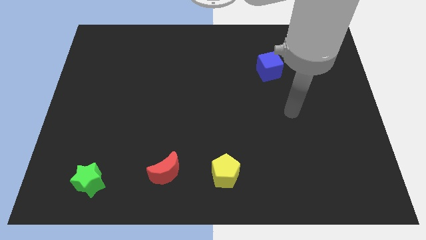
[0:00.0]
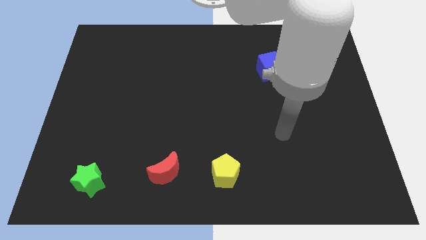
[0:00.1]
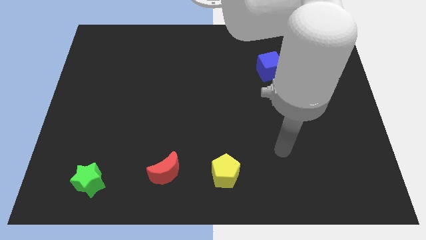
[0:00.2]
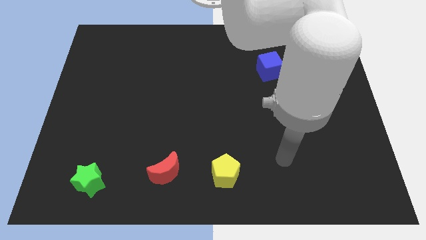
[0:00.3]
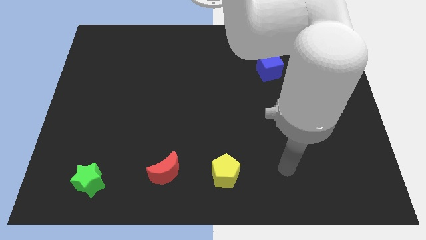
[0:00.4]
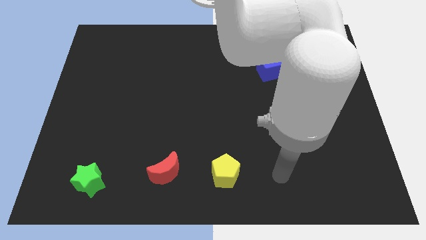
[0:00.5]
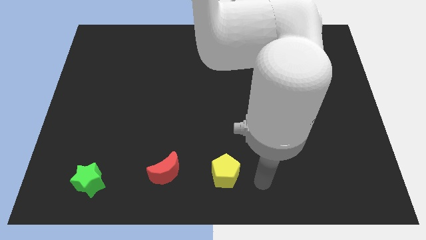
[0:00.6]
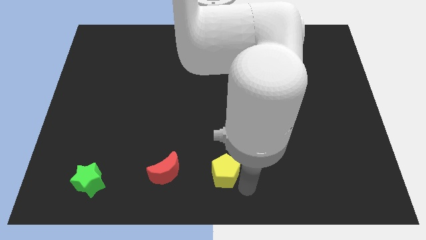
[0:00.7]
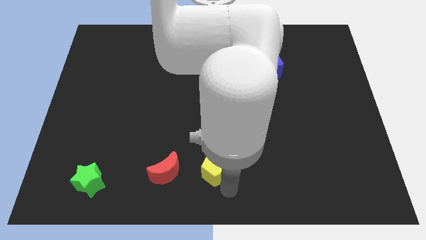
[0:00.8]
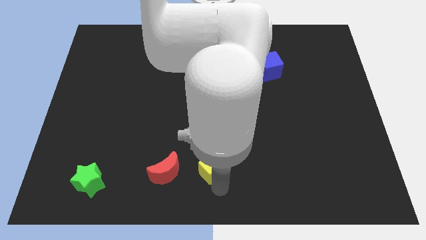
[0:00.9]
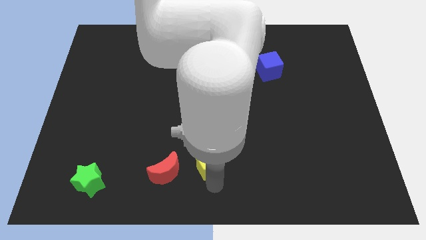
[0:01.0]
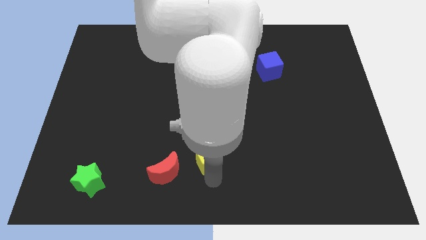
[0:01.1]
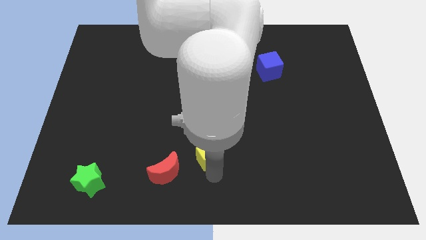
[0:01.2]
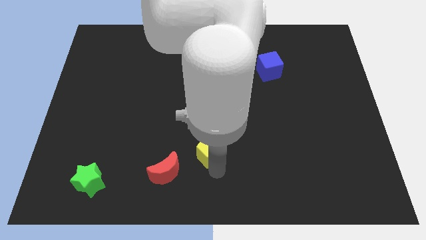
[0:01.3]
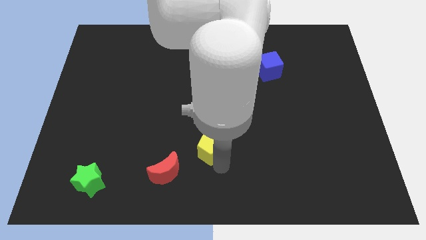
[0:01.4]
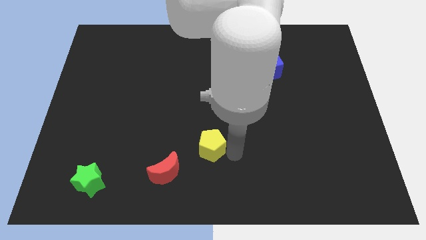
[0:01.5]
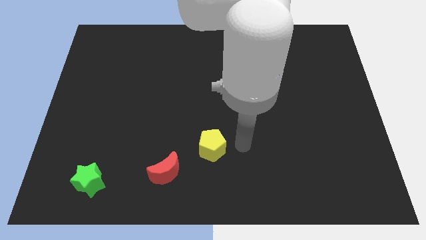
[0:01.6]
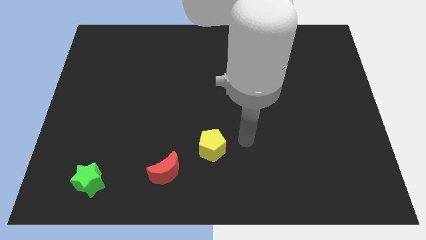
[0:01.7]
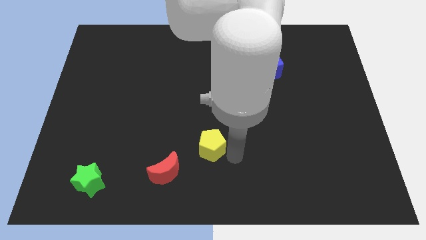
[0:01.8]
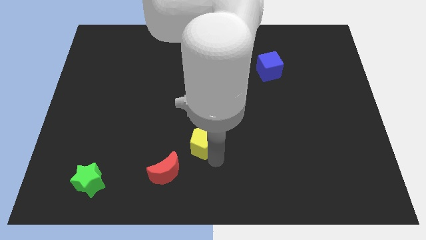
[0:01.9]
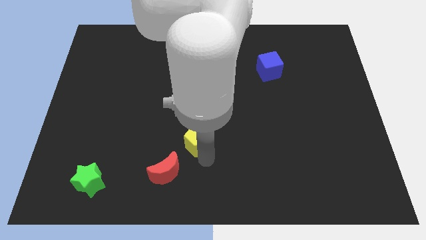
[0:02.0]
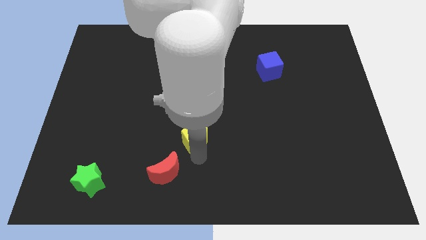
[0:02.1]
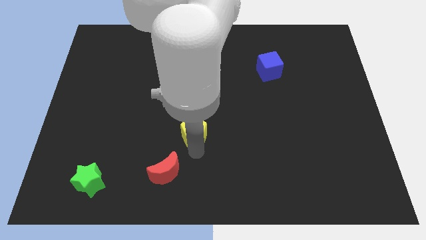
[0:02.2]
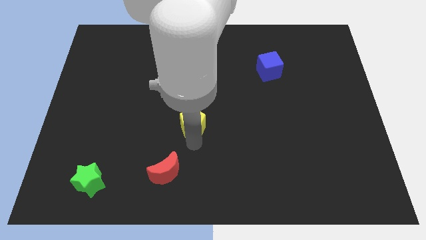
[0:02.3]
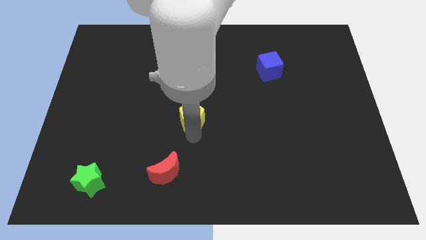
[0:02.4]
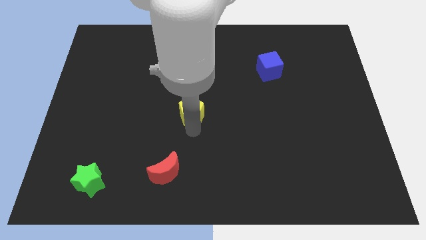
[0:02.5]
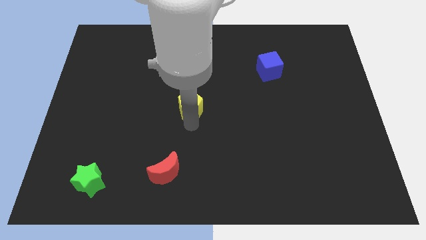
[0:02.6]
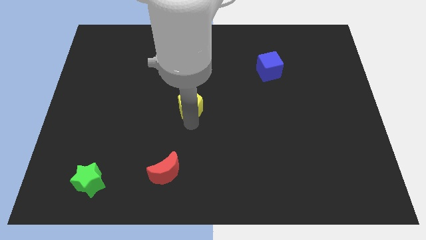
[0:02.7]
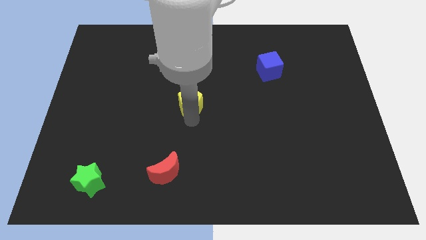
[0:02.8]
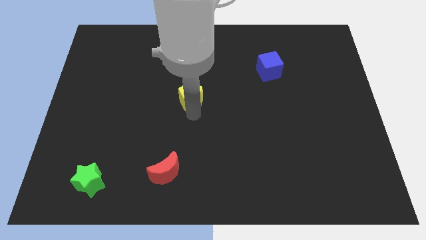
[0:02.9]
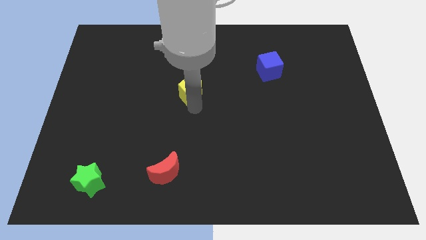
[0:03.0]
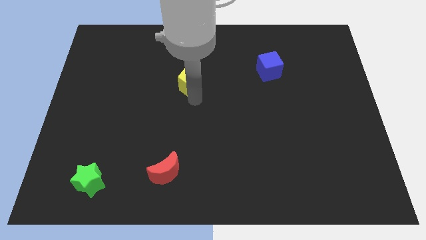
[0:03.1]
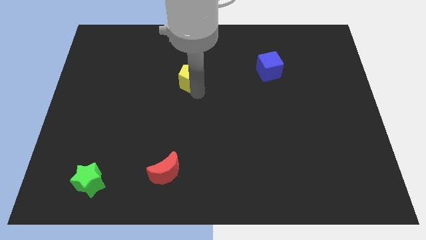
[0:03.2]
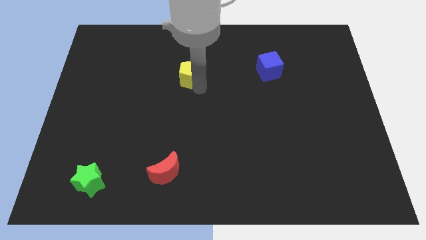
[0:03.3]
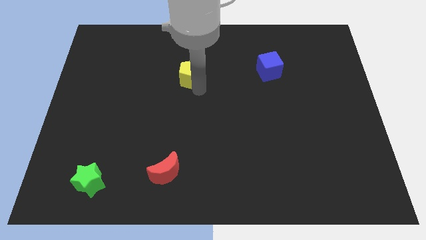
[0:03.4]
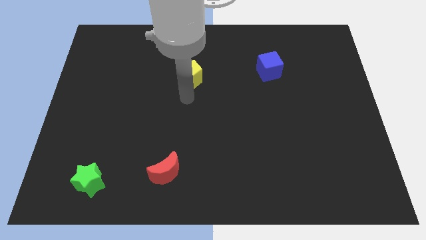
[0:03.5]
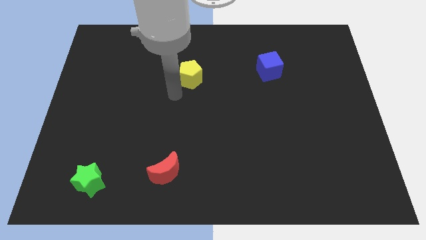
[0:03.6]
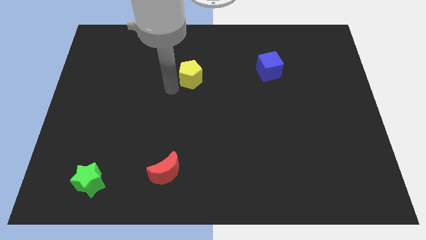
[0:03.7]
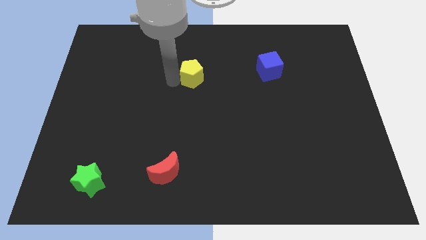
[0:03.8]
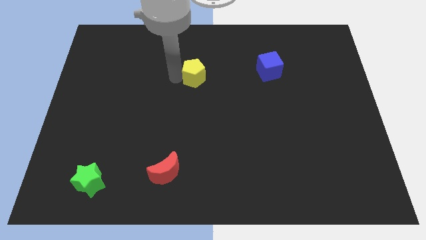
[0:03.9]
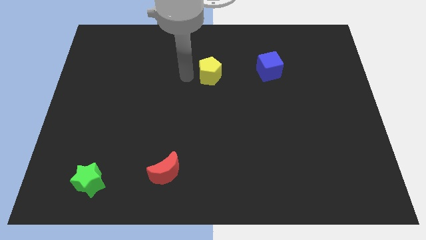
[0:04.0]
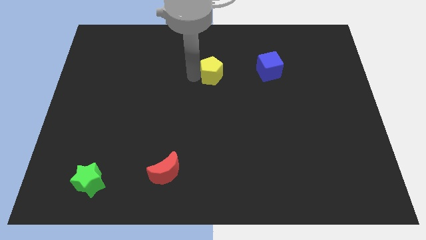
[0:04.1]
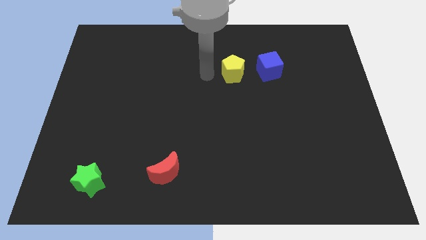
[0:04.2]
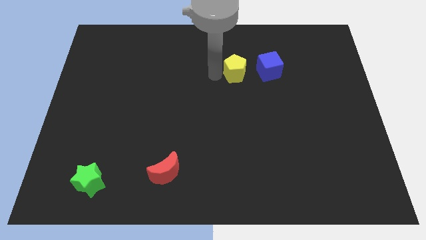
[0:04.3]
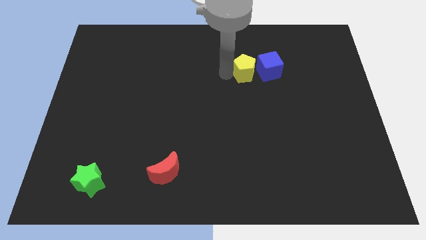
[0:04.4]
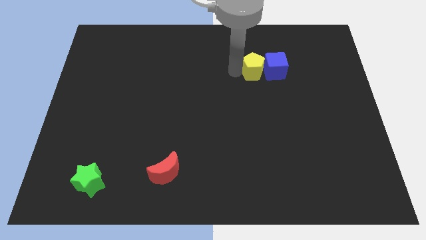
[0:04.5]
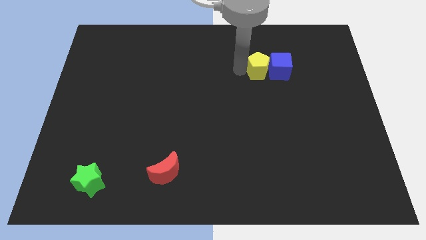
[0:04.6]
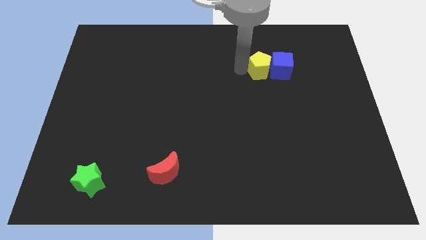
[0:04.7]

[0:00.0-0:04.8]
slide the pentagon to the blue block

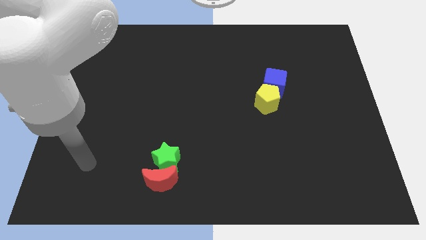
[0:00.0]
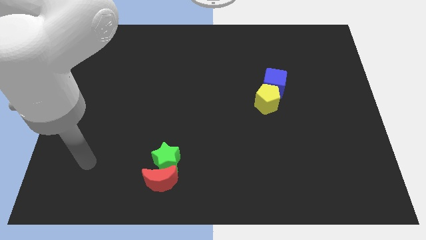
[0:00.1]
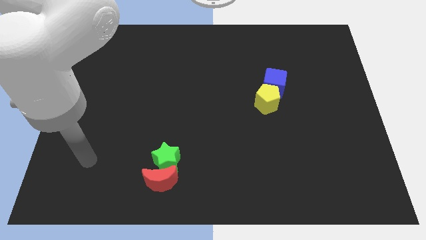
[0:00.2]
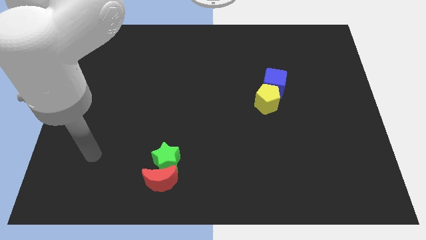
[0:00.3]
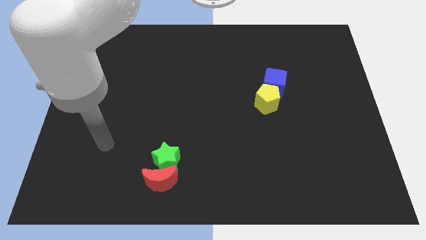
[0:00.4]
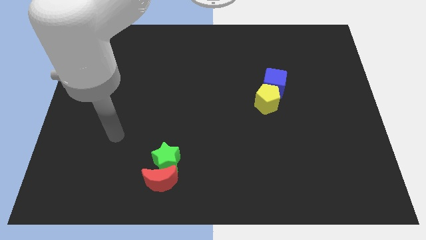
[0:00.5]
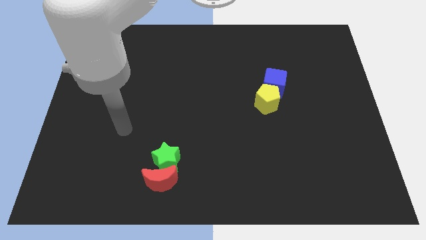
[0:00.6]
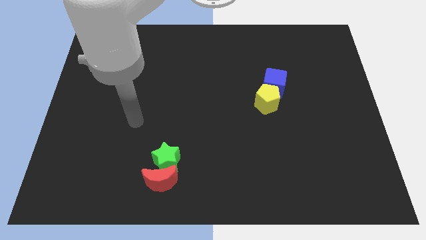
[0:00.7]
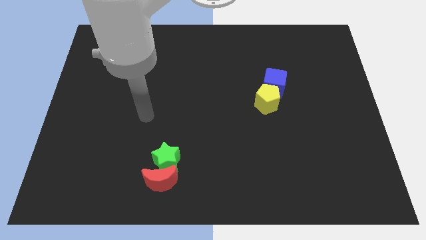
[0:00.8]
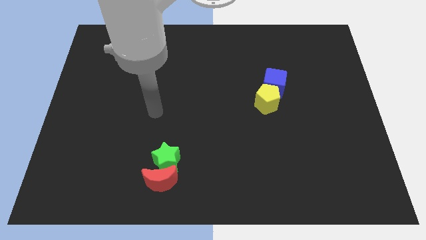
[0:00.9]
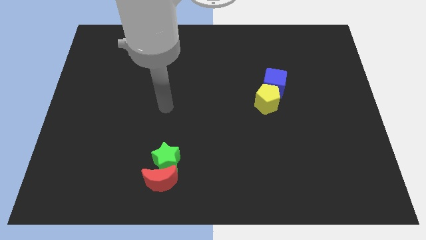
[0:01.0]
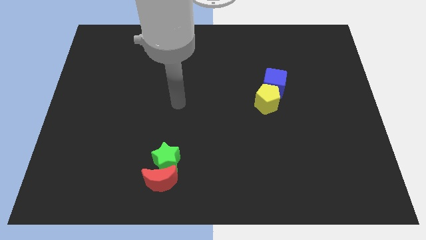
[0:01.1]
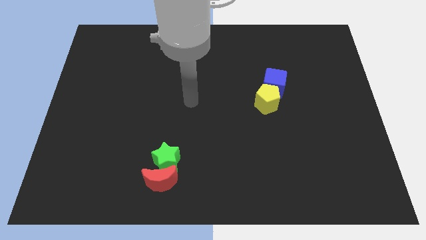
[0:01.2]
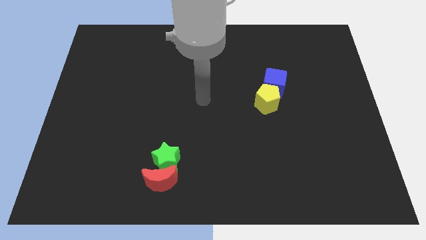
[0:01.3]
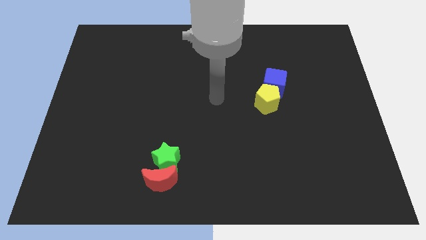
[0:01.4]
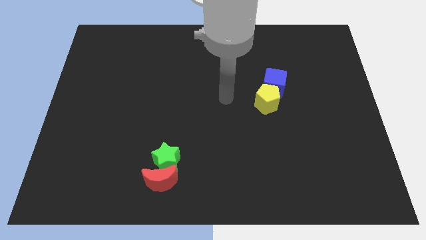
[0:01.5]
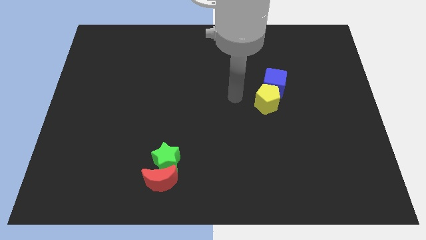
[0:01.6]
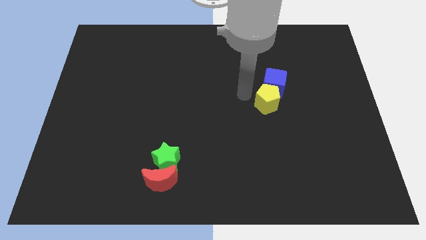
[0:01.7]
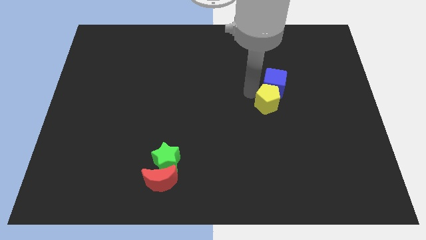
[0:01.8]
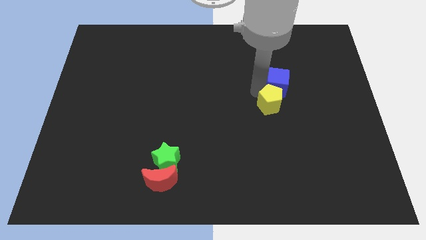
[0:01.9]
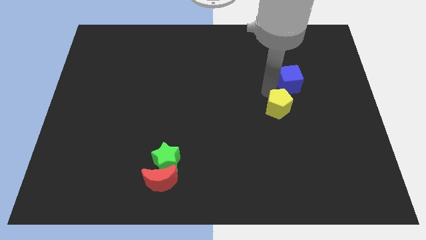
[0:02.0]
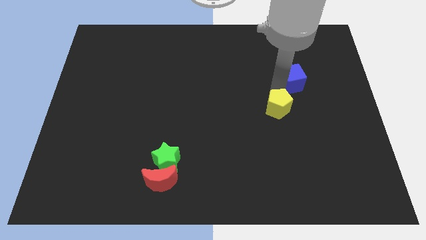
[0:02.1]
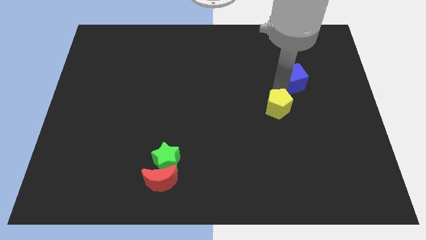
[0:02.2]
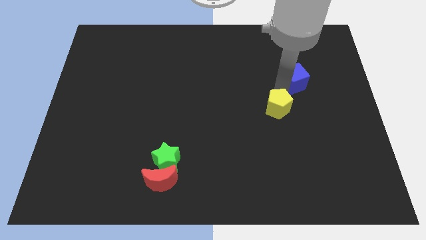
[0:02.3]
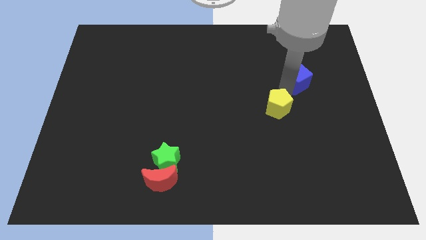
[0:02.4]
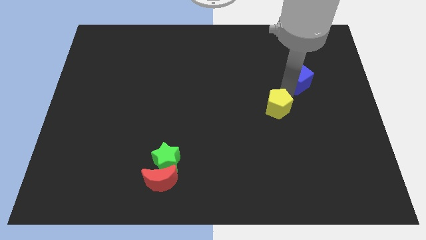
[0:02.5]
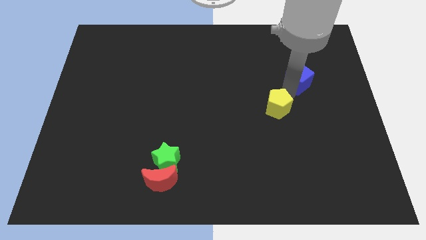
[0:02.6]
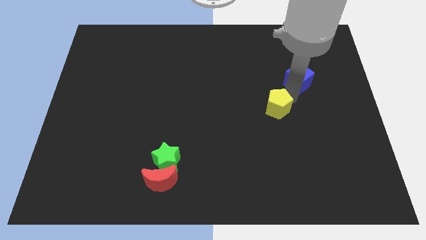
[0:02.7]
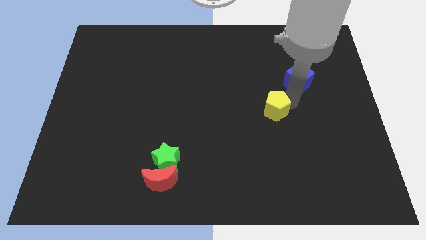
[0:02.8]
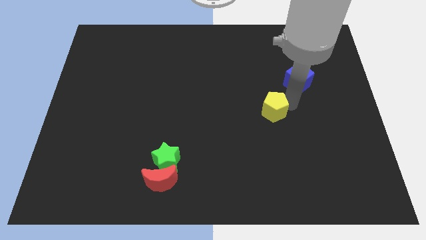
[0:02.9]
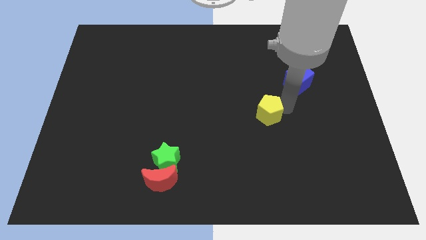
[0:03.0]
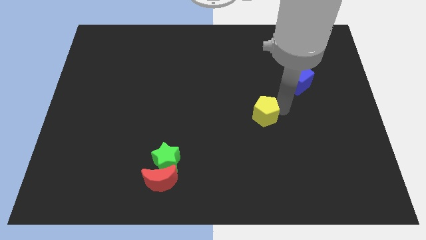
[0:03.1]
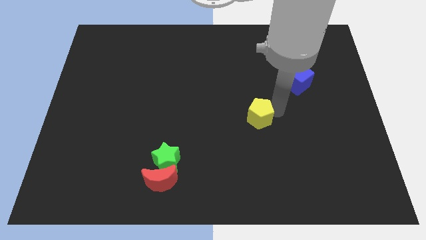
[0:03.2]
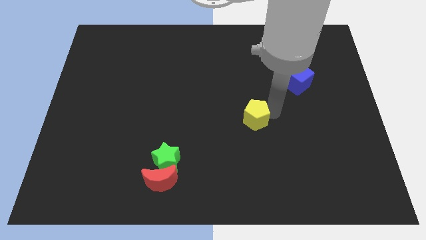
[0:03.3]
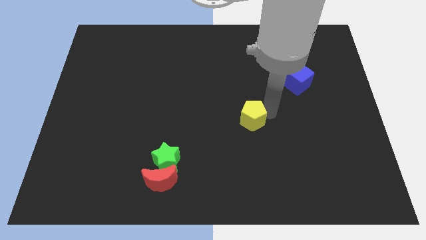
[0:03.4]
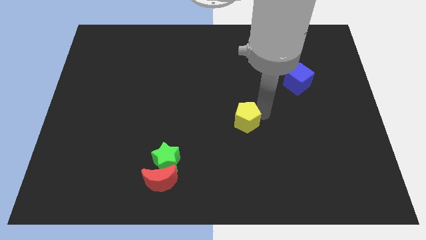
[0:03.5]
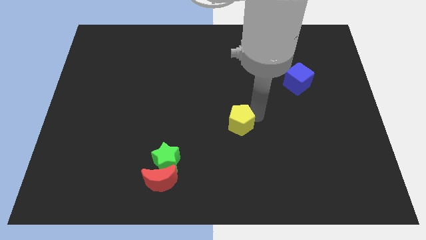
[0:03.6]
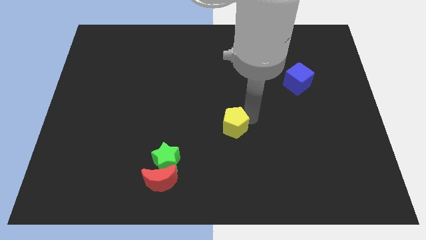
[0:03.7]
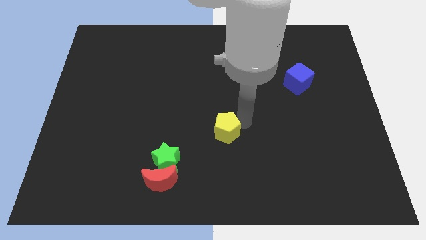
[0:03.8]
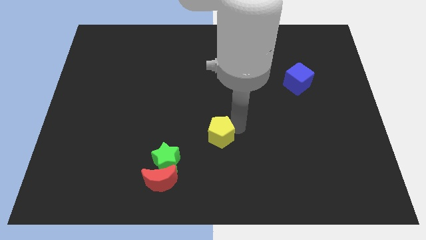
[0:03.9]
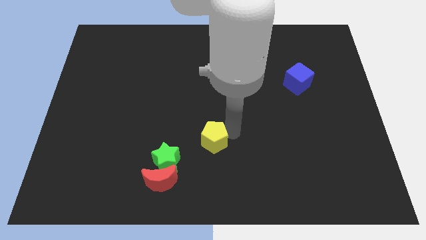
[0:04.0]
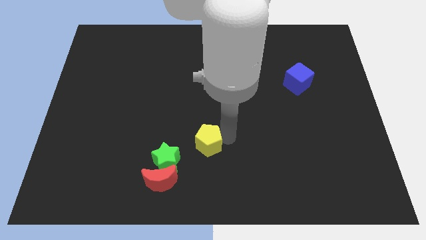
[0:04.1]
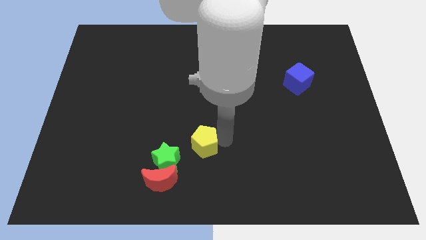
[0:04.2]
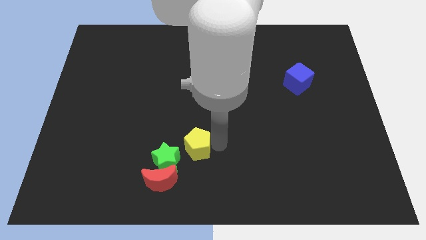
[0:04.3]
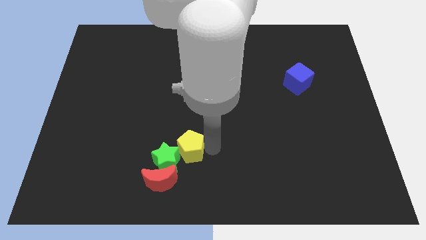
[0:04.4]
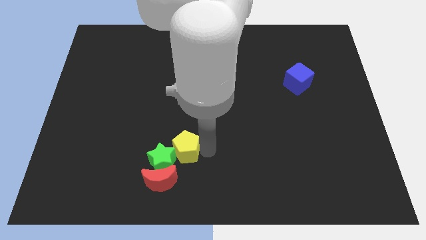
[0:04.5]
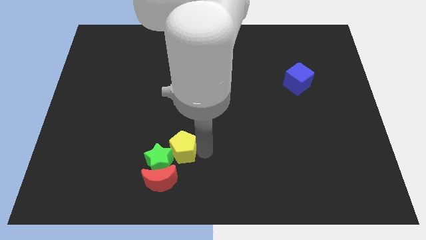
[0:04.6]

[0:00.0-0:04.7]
move the pentagon to the green star
